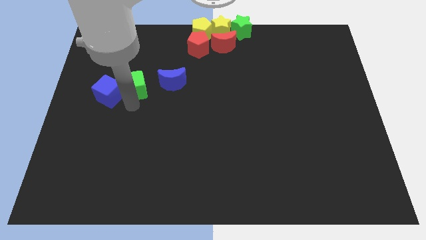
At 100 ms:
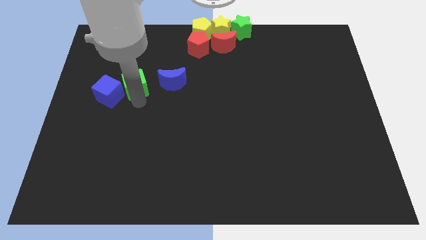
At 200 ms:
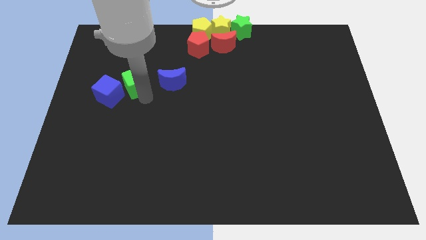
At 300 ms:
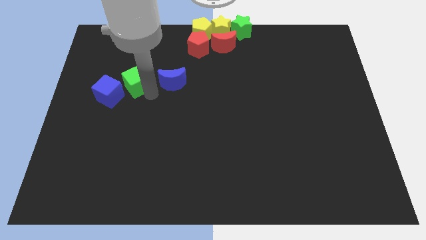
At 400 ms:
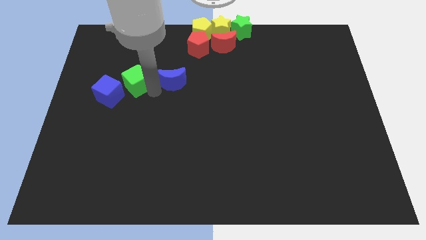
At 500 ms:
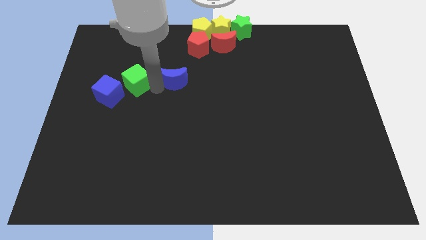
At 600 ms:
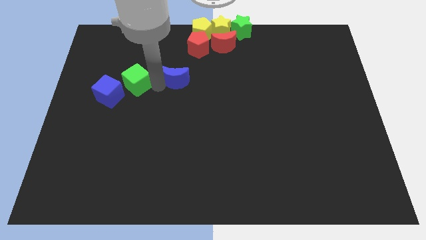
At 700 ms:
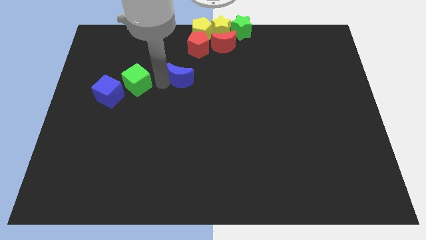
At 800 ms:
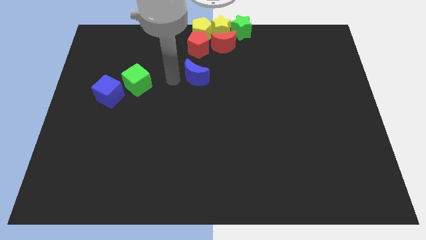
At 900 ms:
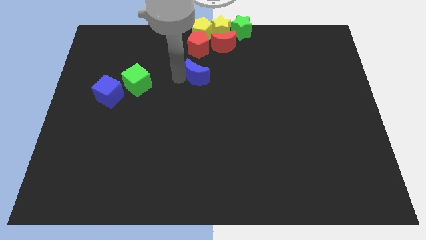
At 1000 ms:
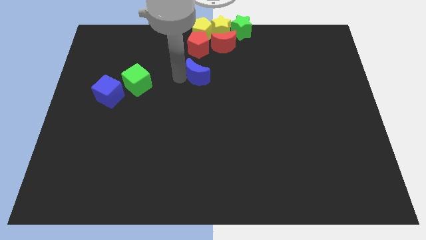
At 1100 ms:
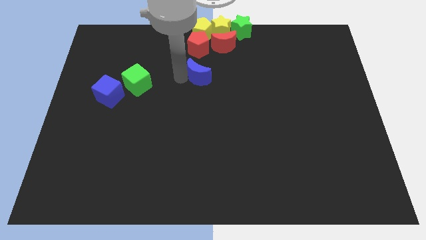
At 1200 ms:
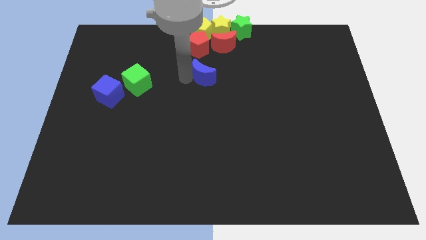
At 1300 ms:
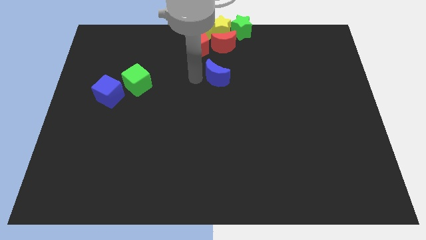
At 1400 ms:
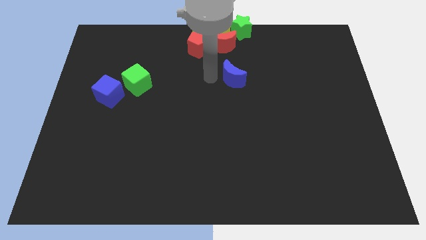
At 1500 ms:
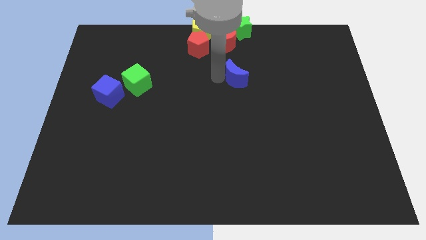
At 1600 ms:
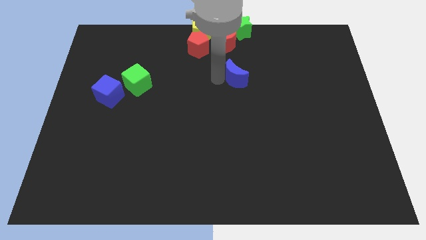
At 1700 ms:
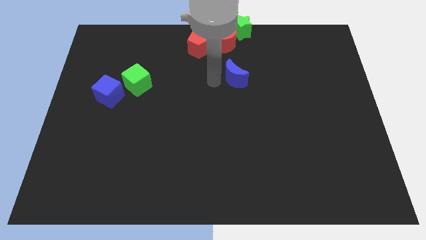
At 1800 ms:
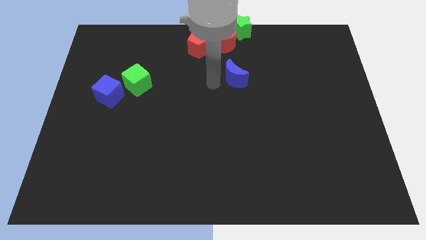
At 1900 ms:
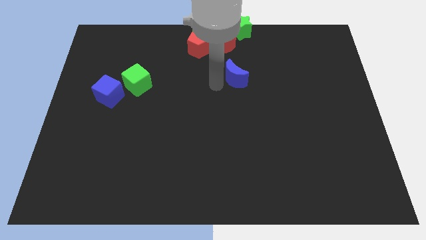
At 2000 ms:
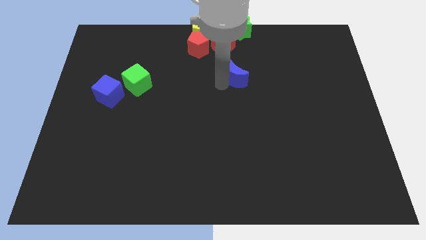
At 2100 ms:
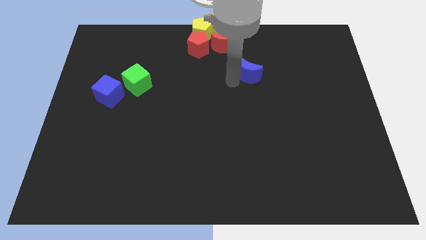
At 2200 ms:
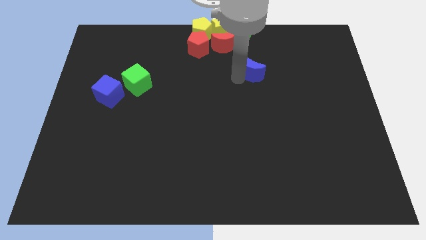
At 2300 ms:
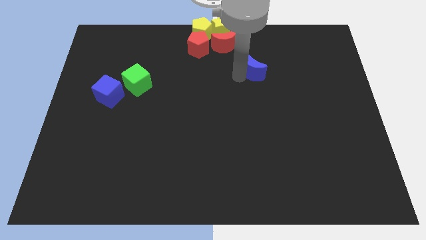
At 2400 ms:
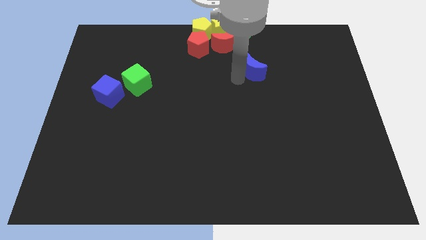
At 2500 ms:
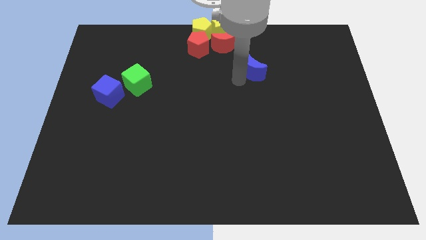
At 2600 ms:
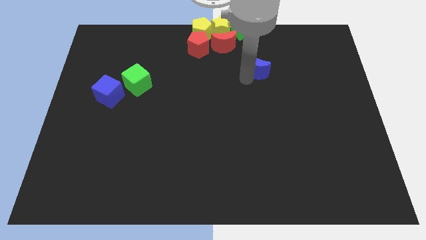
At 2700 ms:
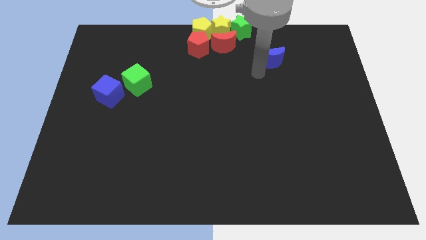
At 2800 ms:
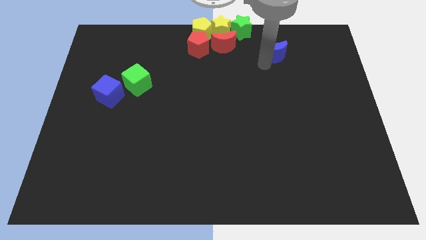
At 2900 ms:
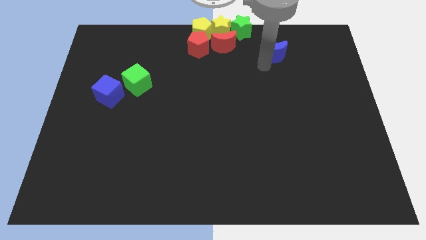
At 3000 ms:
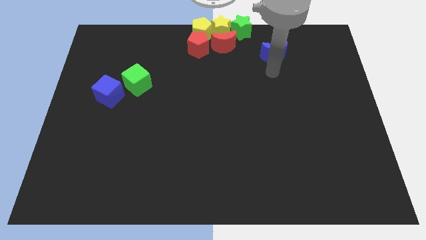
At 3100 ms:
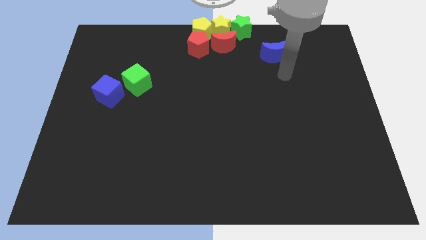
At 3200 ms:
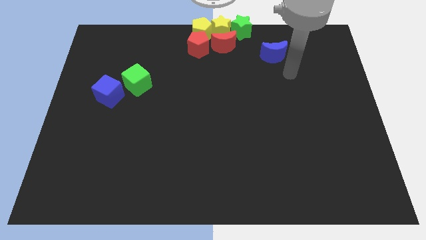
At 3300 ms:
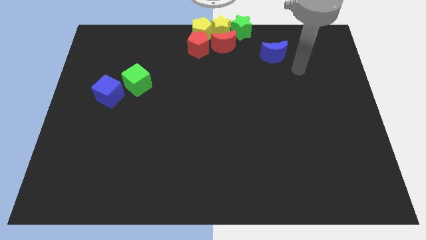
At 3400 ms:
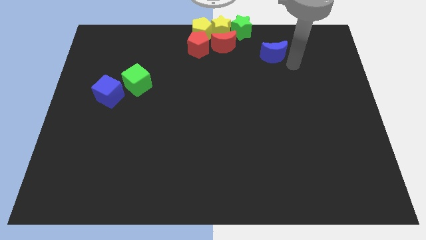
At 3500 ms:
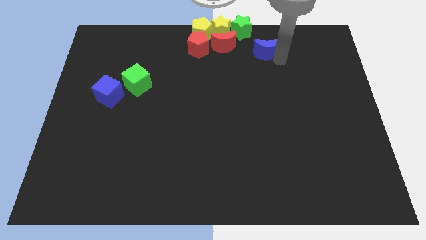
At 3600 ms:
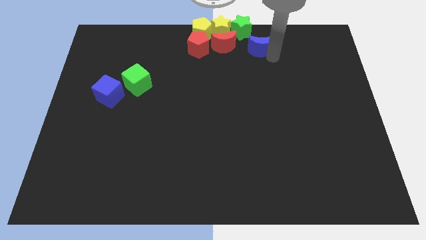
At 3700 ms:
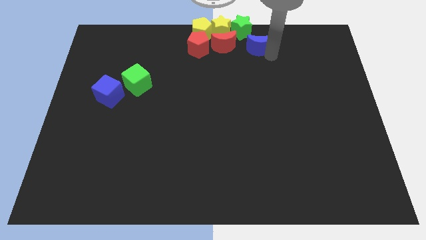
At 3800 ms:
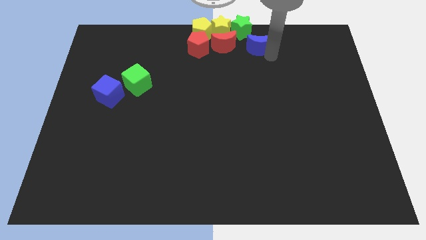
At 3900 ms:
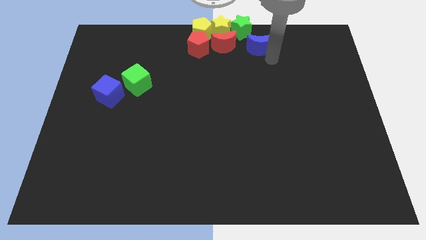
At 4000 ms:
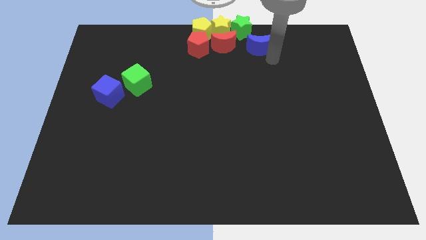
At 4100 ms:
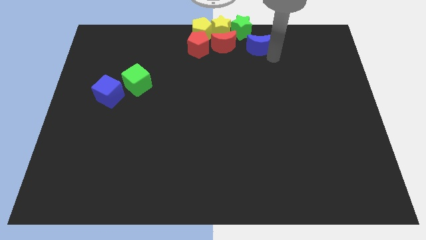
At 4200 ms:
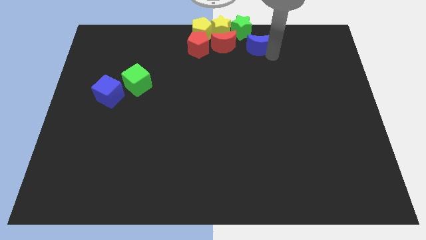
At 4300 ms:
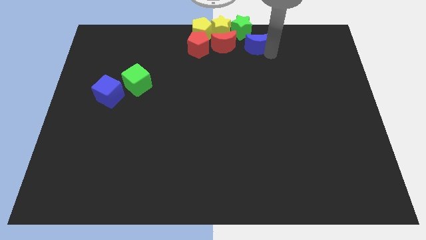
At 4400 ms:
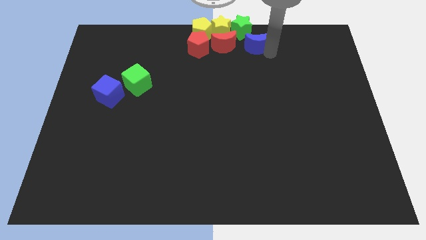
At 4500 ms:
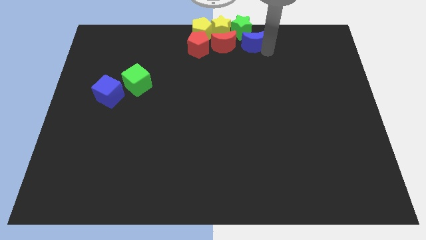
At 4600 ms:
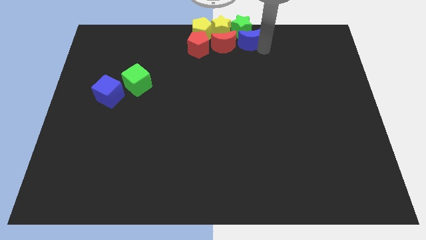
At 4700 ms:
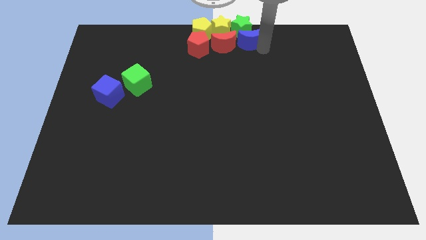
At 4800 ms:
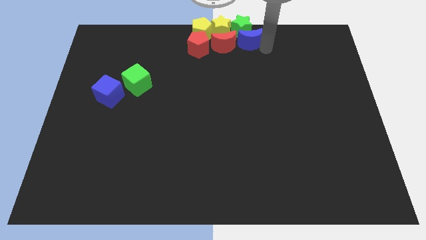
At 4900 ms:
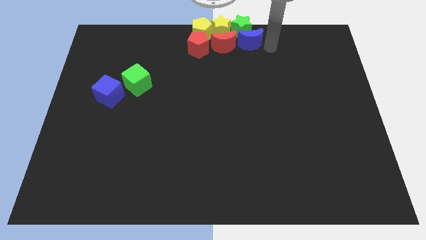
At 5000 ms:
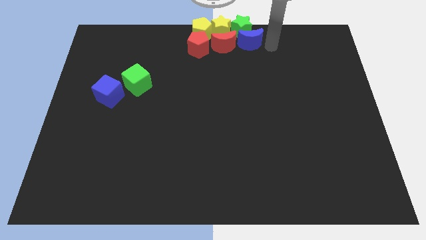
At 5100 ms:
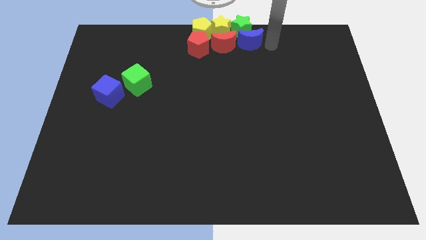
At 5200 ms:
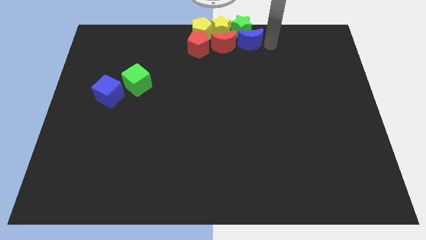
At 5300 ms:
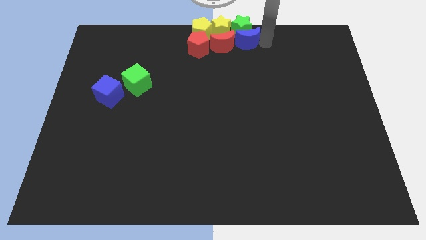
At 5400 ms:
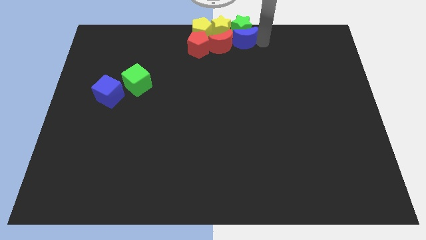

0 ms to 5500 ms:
place blue crescent below the green star

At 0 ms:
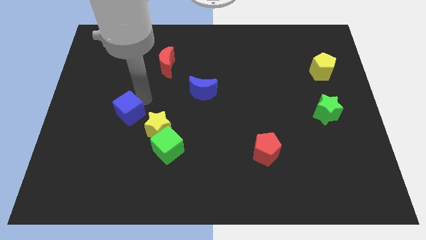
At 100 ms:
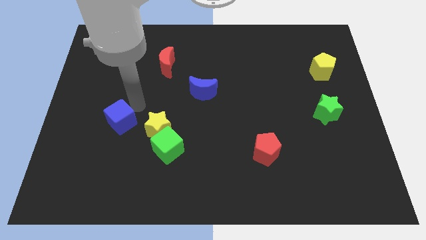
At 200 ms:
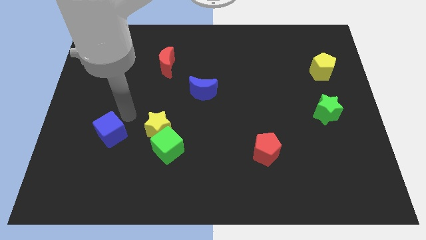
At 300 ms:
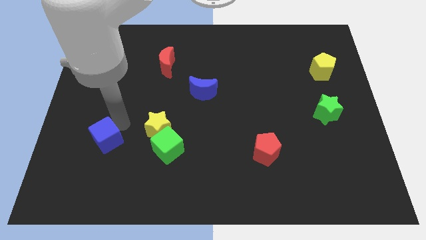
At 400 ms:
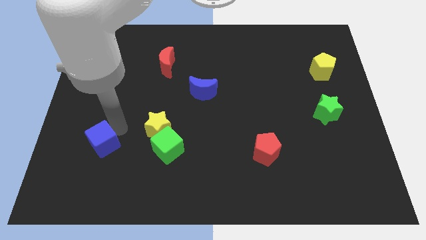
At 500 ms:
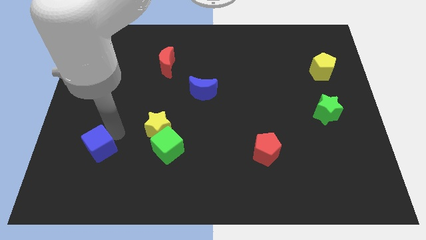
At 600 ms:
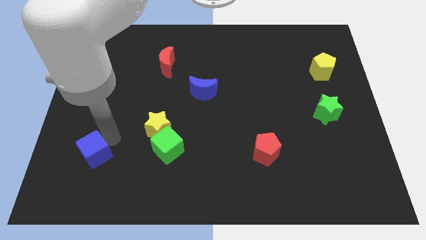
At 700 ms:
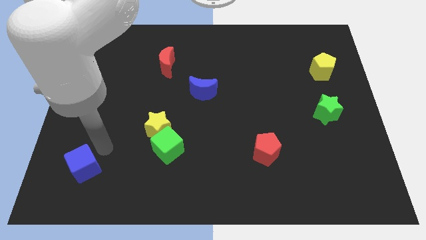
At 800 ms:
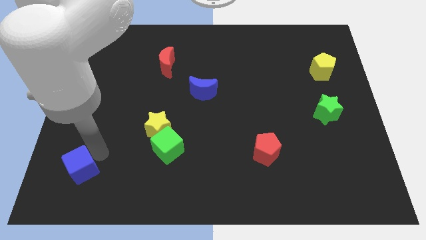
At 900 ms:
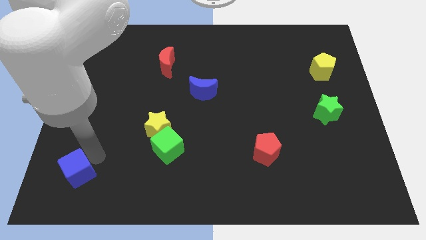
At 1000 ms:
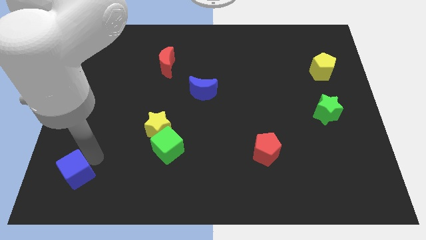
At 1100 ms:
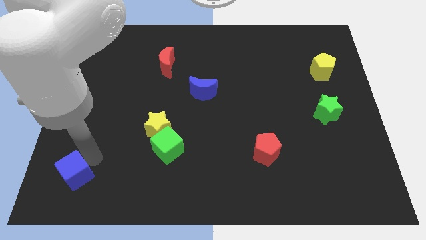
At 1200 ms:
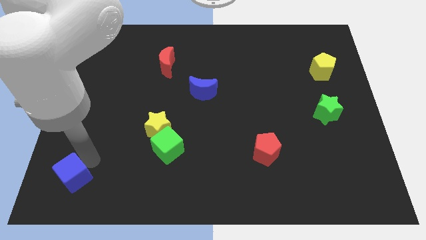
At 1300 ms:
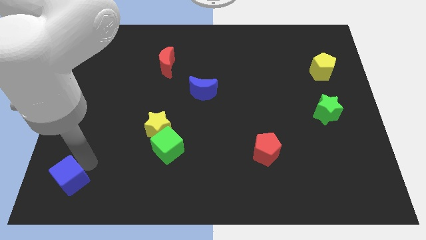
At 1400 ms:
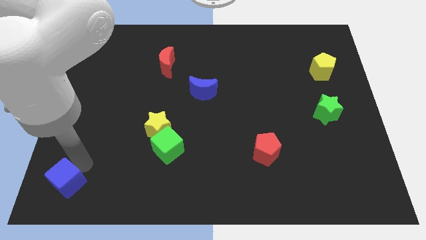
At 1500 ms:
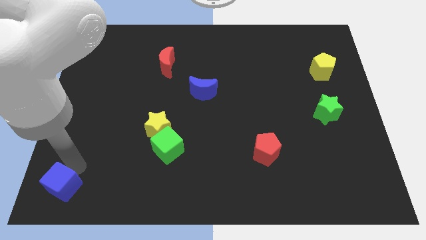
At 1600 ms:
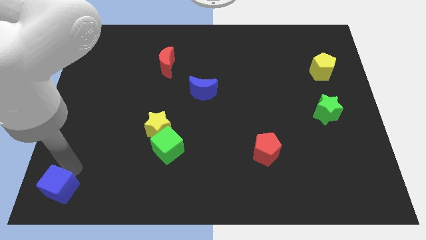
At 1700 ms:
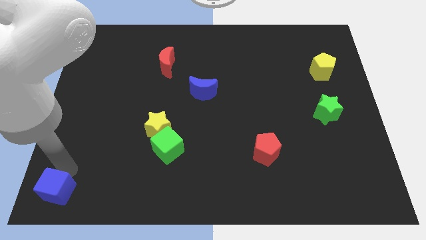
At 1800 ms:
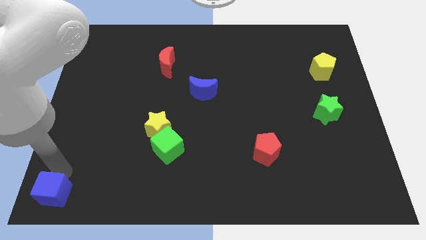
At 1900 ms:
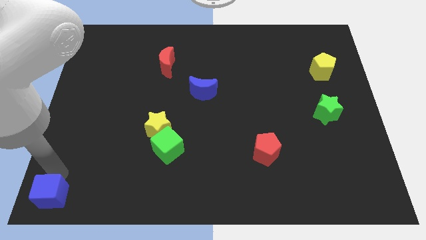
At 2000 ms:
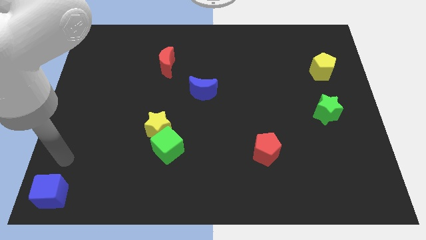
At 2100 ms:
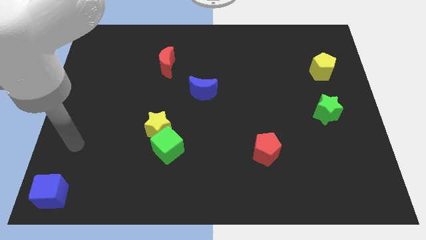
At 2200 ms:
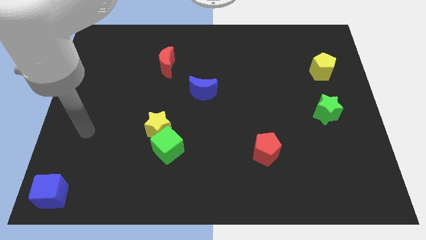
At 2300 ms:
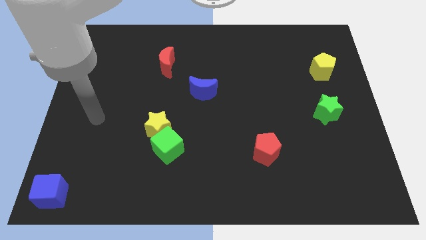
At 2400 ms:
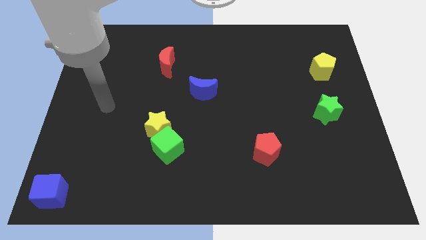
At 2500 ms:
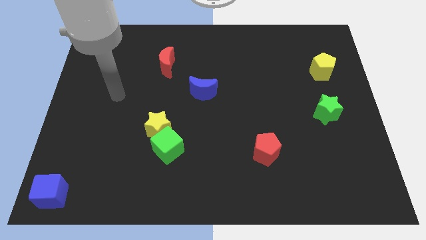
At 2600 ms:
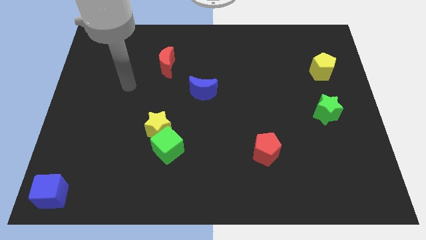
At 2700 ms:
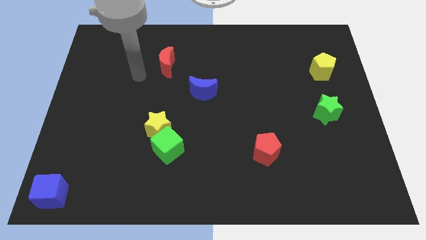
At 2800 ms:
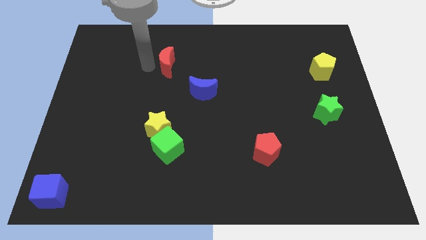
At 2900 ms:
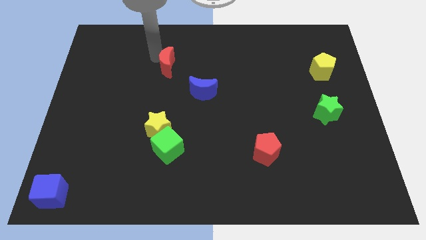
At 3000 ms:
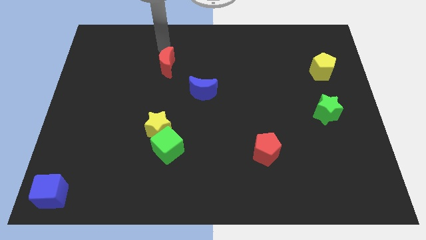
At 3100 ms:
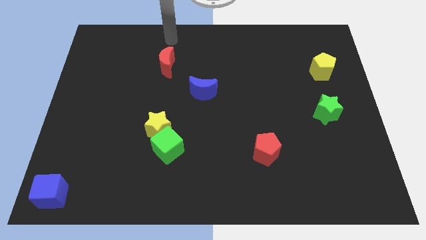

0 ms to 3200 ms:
move the blue cube to the bottom left

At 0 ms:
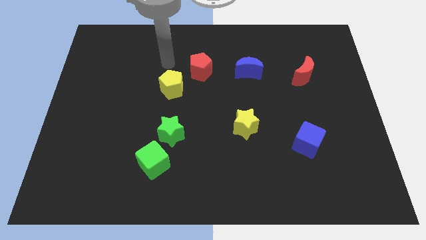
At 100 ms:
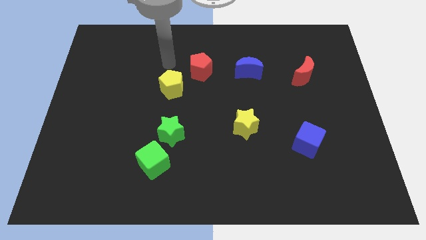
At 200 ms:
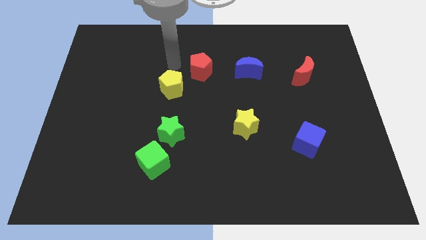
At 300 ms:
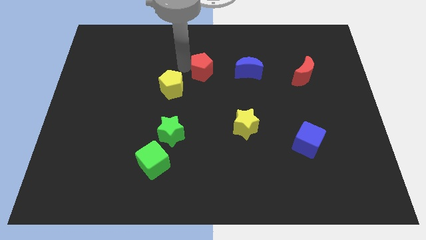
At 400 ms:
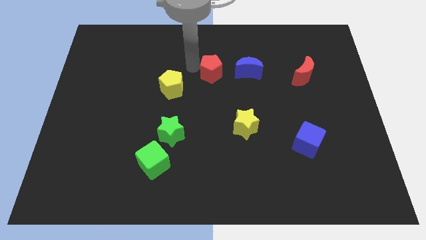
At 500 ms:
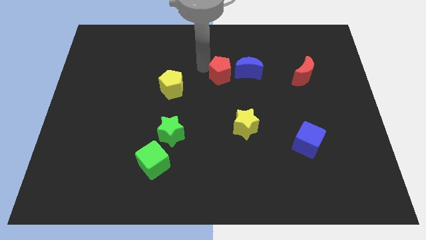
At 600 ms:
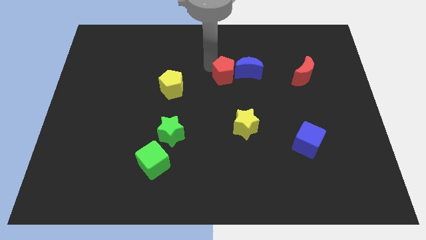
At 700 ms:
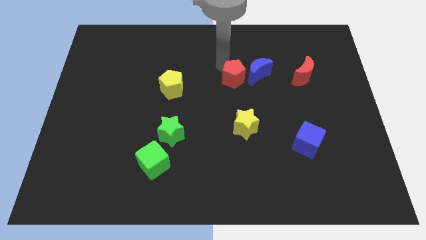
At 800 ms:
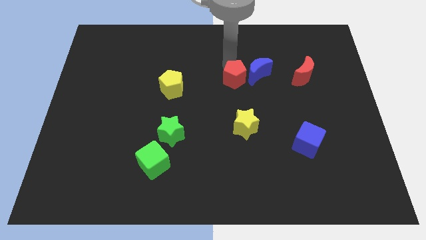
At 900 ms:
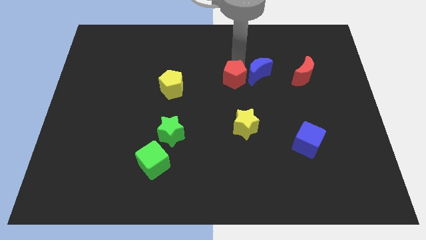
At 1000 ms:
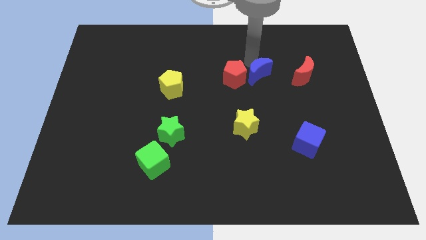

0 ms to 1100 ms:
place your arm in between blue crescent and the red pentagon
